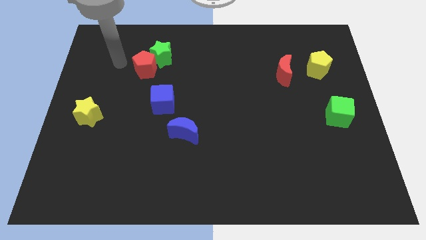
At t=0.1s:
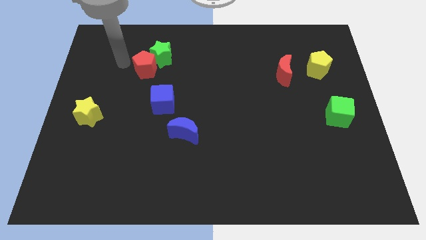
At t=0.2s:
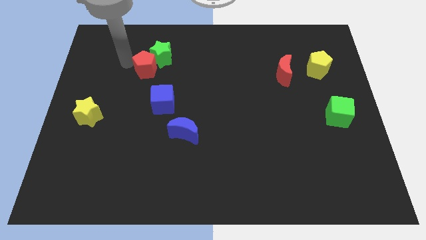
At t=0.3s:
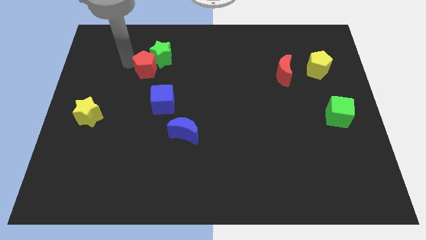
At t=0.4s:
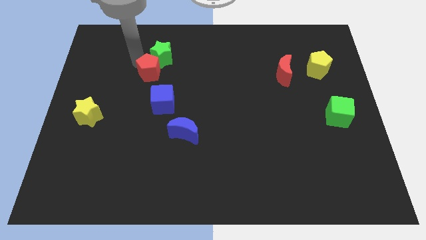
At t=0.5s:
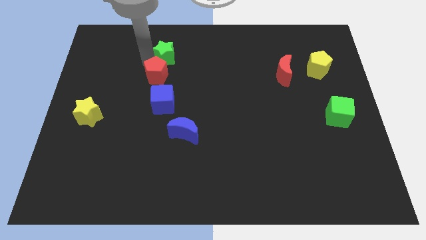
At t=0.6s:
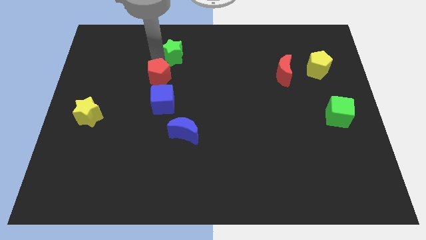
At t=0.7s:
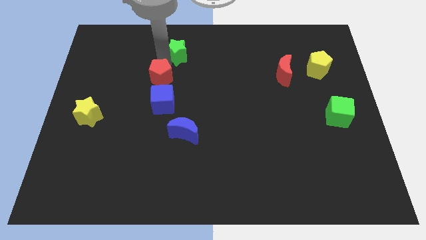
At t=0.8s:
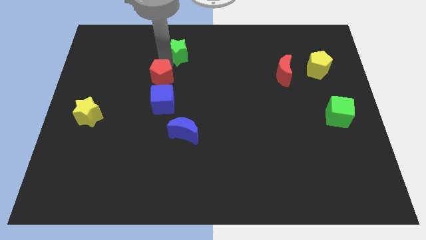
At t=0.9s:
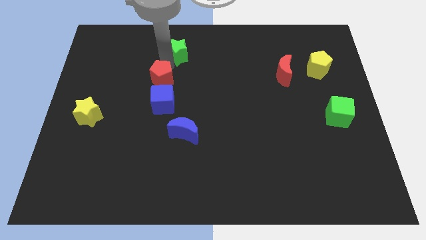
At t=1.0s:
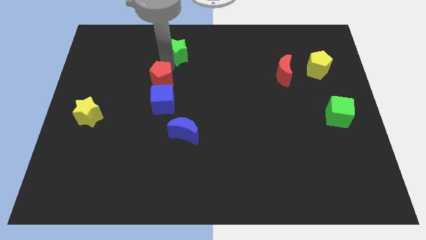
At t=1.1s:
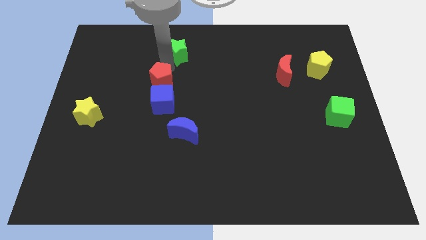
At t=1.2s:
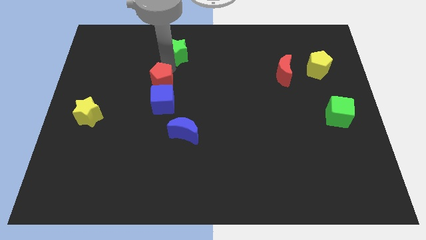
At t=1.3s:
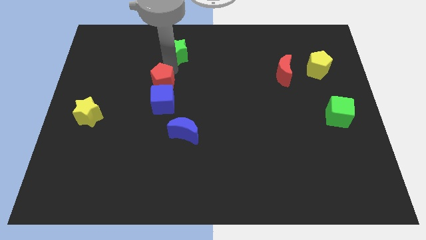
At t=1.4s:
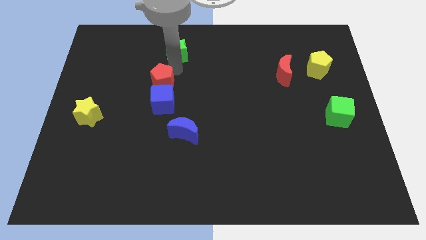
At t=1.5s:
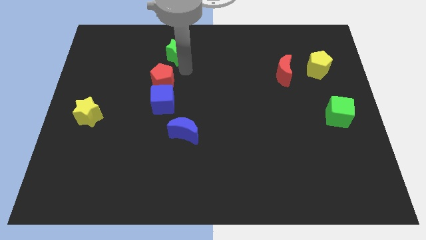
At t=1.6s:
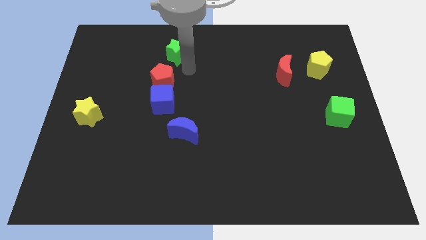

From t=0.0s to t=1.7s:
separate the red pentagon from the green star

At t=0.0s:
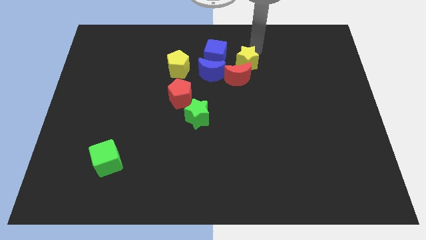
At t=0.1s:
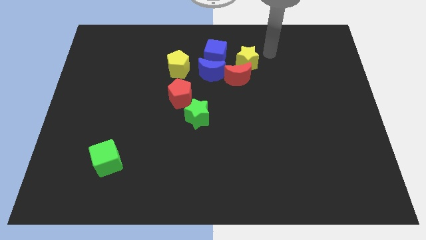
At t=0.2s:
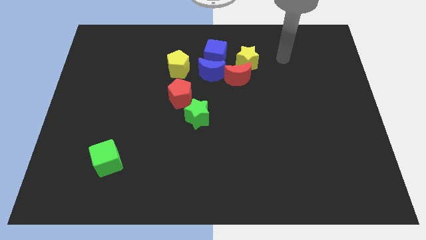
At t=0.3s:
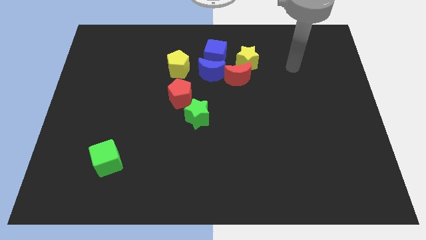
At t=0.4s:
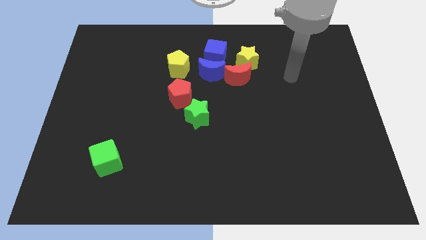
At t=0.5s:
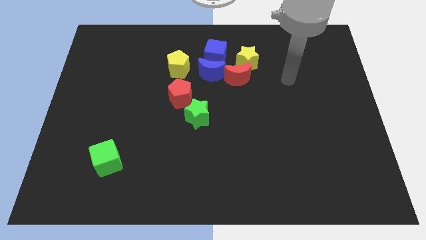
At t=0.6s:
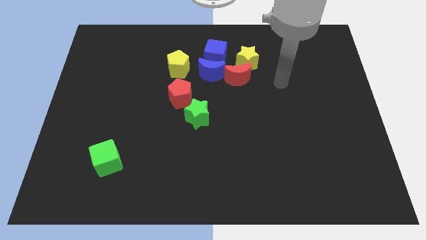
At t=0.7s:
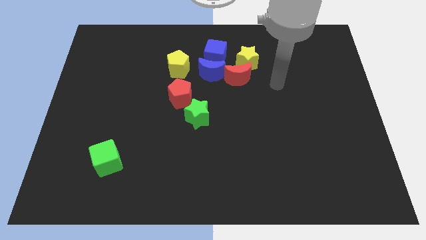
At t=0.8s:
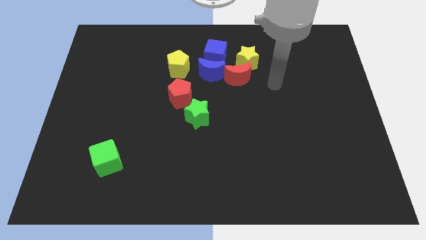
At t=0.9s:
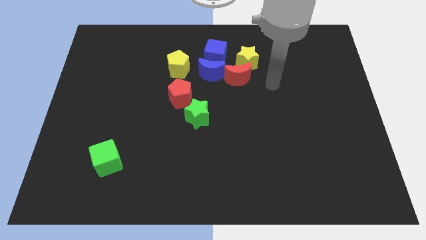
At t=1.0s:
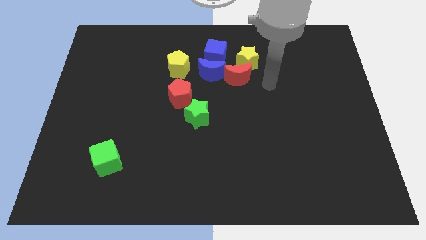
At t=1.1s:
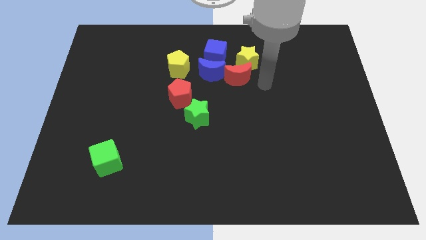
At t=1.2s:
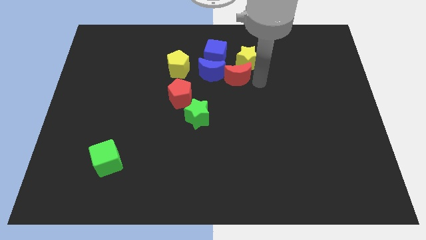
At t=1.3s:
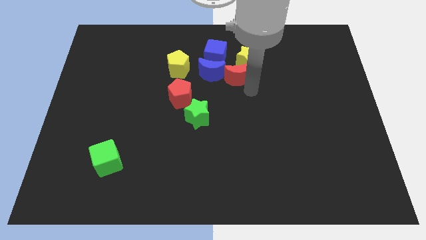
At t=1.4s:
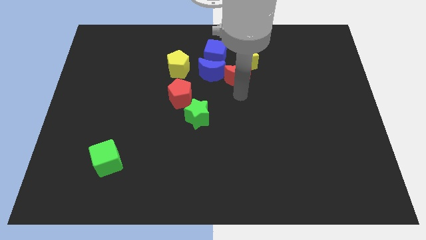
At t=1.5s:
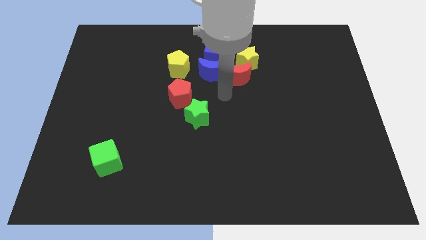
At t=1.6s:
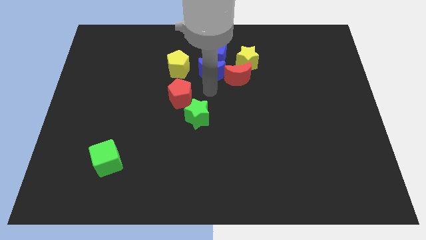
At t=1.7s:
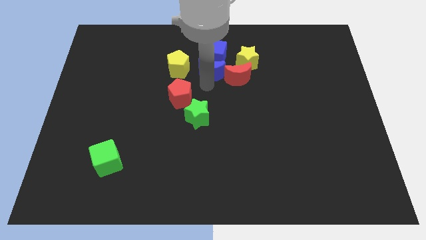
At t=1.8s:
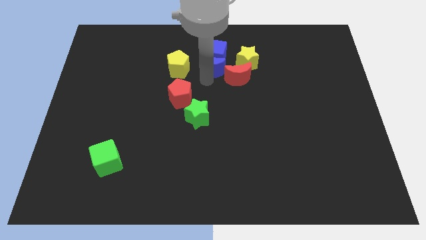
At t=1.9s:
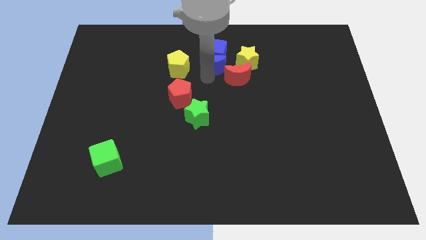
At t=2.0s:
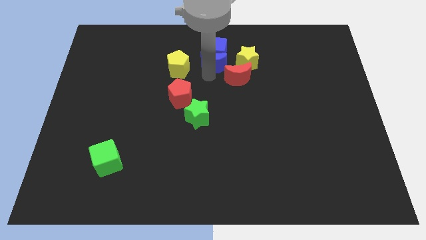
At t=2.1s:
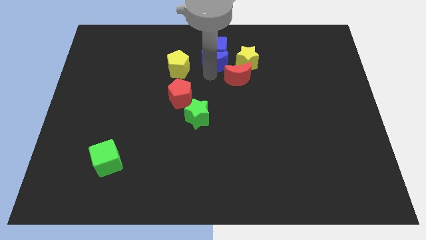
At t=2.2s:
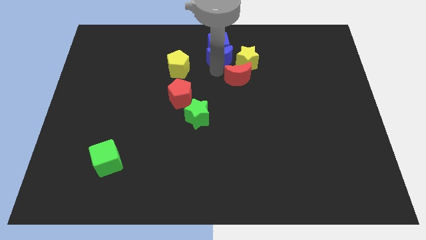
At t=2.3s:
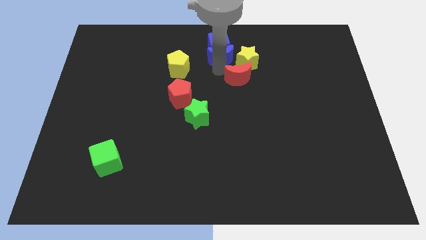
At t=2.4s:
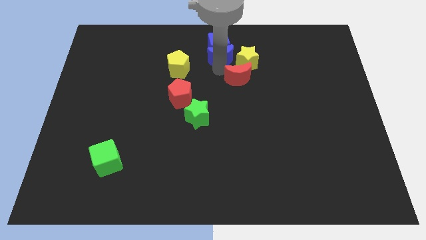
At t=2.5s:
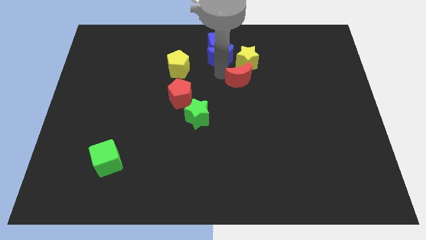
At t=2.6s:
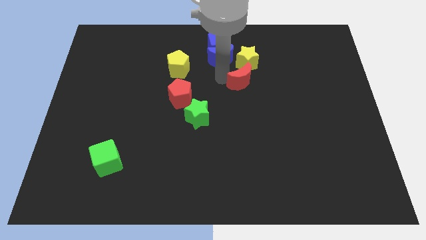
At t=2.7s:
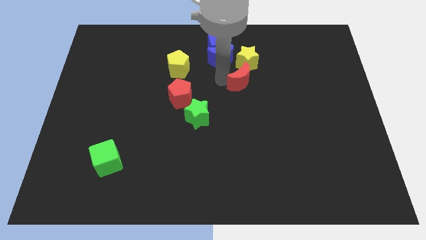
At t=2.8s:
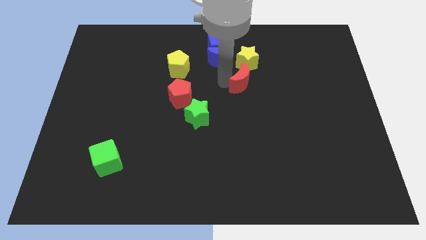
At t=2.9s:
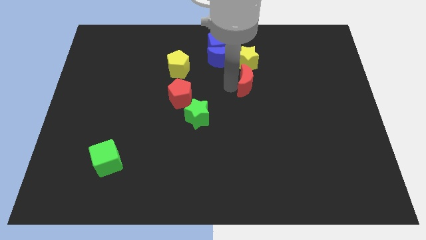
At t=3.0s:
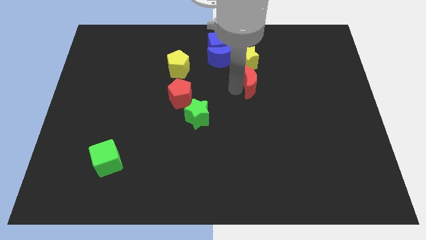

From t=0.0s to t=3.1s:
push blue cube and blue moon to the top center of the board

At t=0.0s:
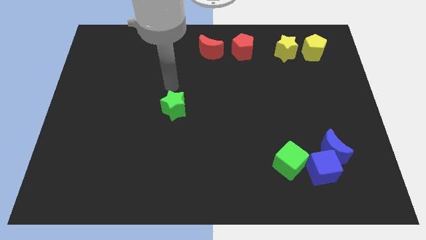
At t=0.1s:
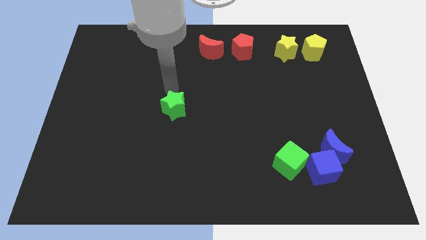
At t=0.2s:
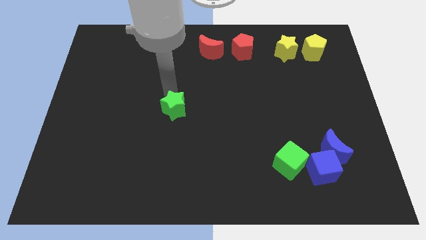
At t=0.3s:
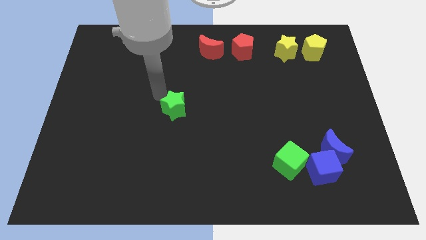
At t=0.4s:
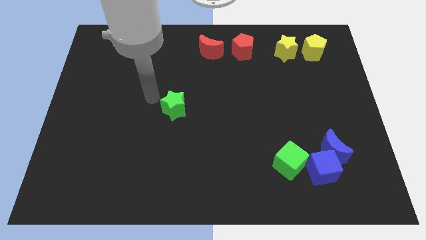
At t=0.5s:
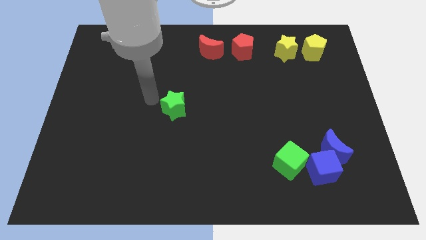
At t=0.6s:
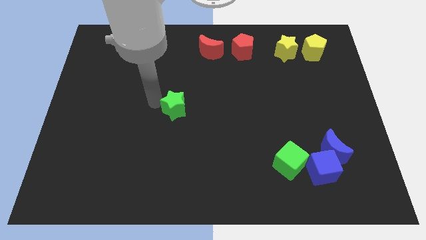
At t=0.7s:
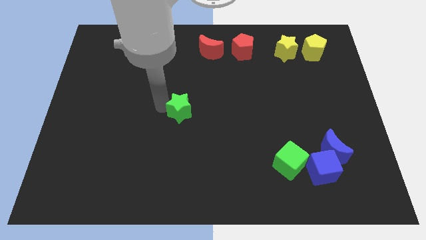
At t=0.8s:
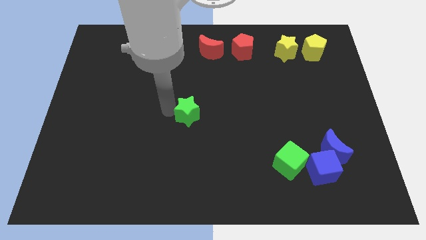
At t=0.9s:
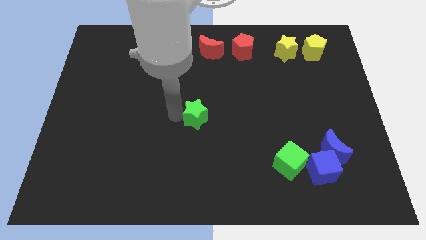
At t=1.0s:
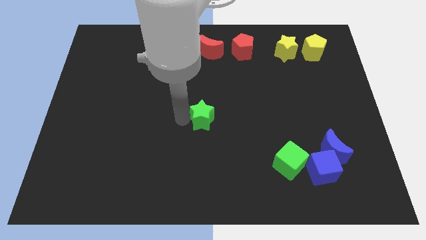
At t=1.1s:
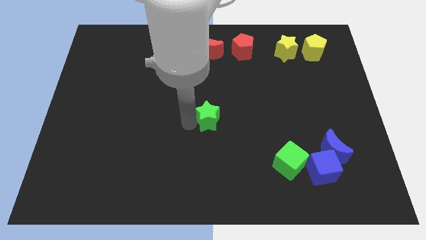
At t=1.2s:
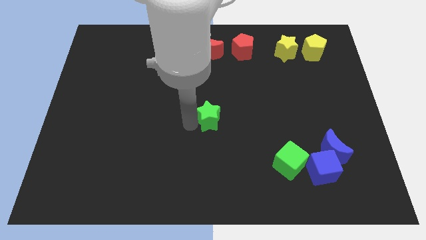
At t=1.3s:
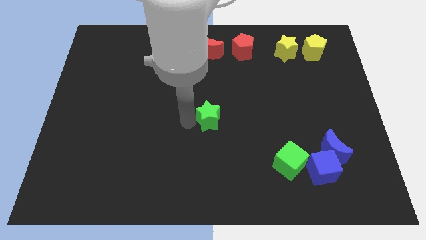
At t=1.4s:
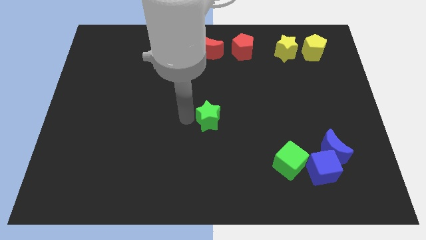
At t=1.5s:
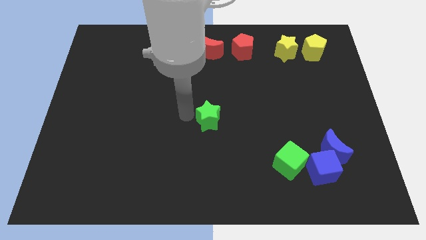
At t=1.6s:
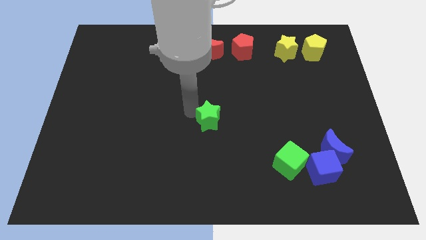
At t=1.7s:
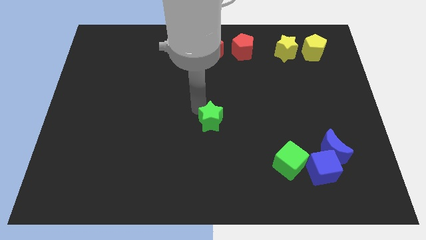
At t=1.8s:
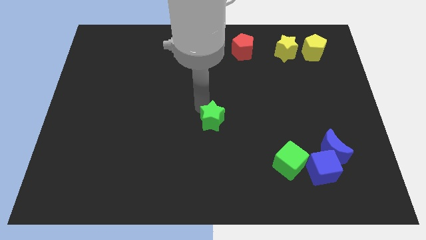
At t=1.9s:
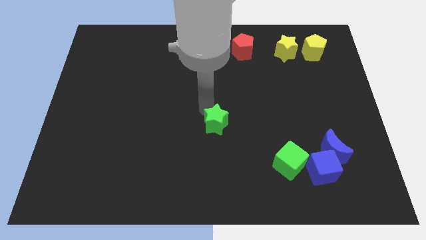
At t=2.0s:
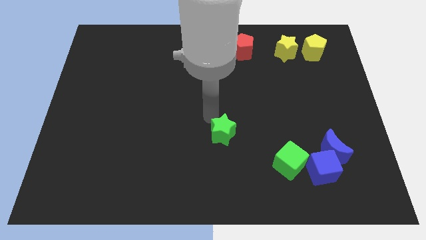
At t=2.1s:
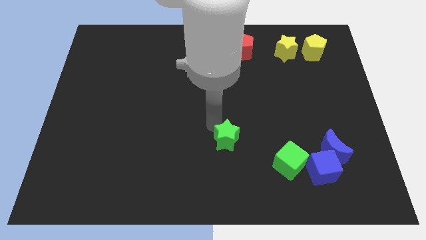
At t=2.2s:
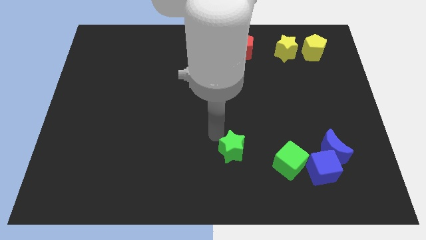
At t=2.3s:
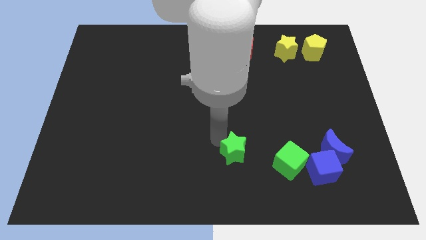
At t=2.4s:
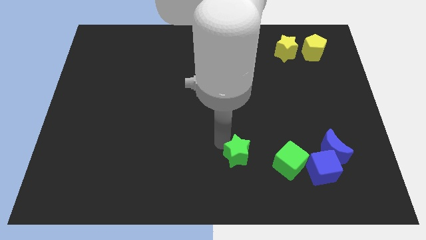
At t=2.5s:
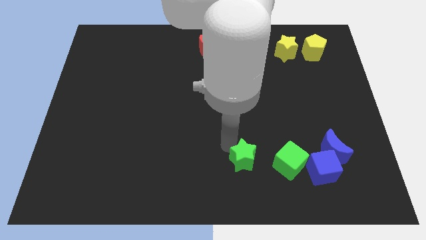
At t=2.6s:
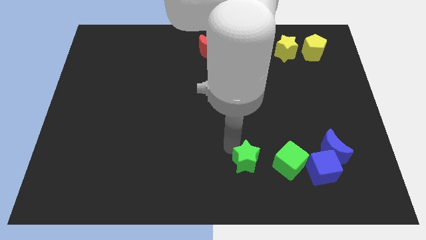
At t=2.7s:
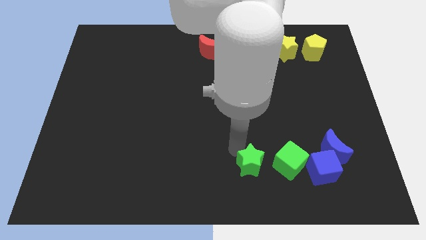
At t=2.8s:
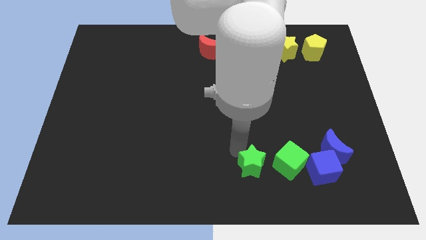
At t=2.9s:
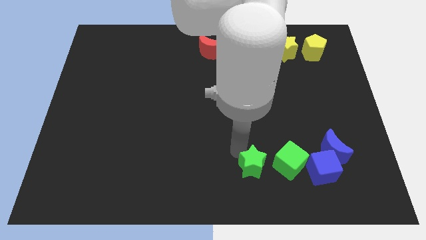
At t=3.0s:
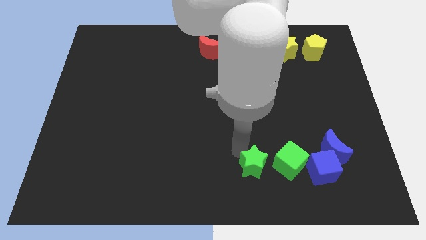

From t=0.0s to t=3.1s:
move green star to the left of green cube

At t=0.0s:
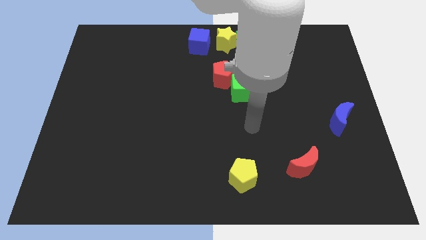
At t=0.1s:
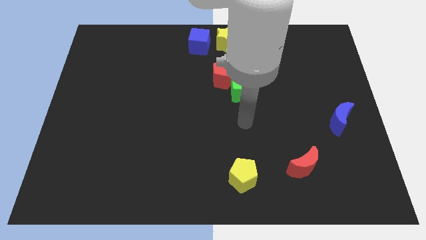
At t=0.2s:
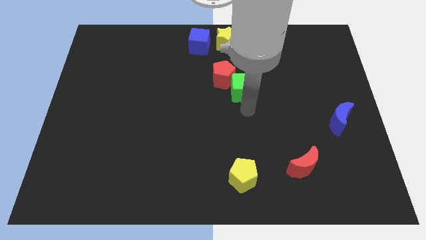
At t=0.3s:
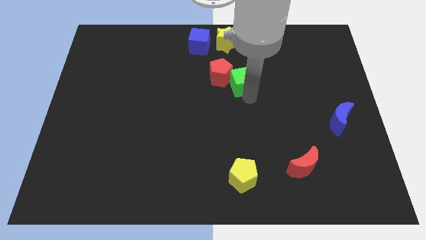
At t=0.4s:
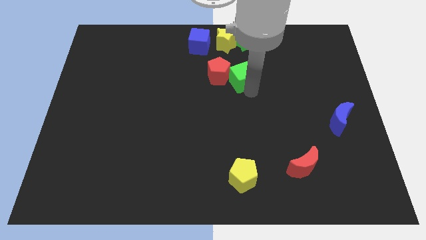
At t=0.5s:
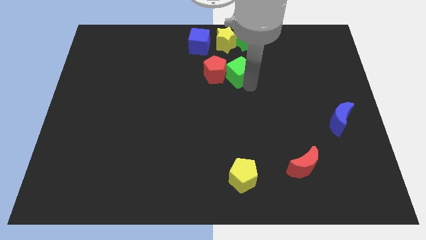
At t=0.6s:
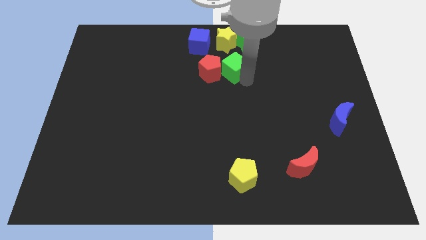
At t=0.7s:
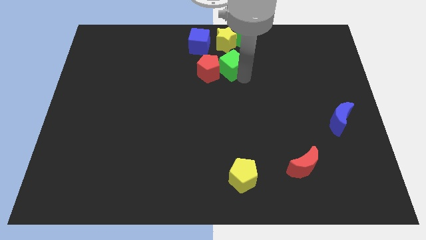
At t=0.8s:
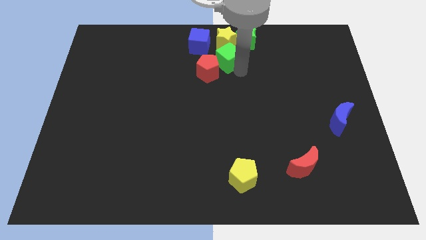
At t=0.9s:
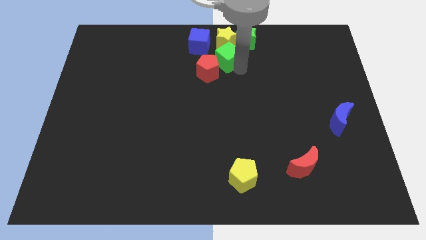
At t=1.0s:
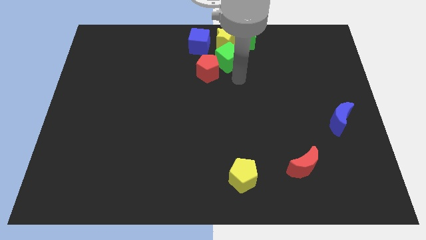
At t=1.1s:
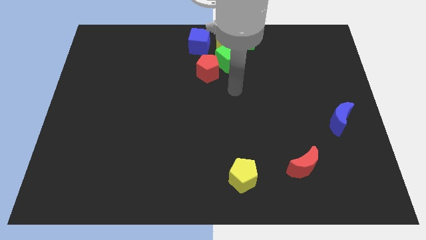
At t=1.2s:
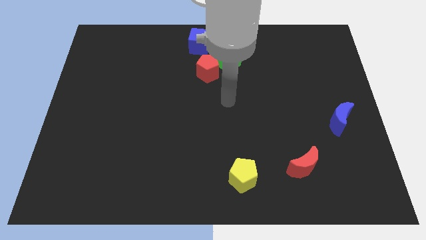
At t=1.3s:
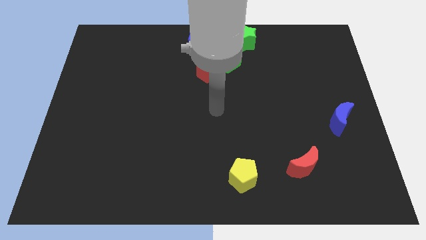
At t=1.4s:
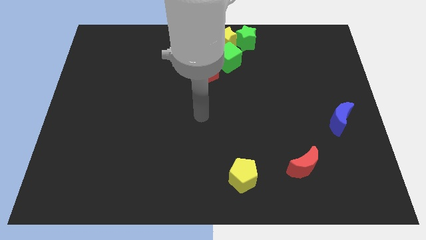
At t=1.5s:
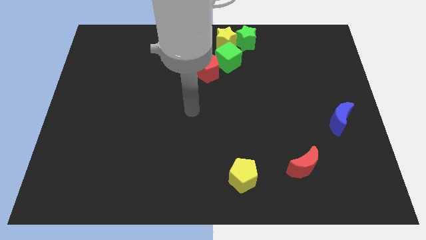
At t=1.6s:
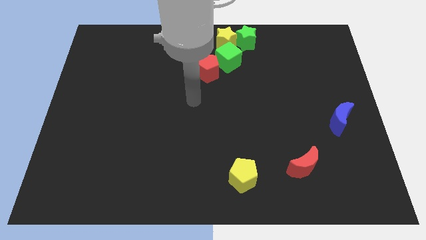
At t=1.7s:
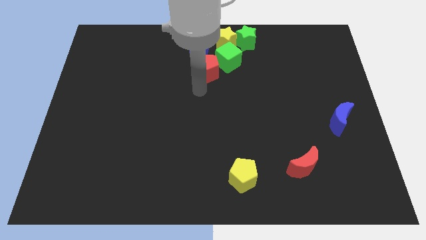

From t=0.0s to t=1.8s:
push the green cube below to the yellow star
